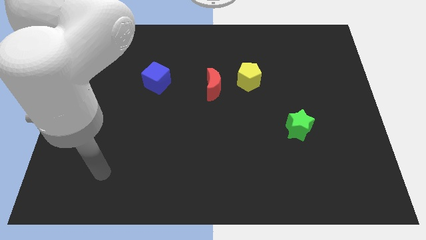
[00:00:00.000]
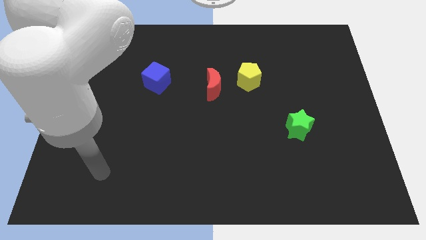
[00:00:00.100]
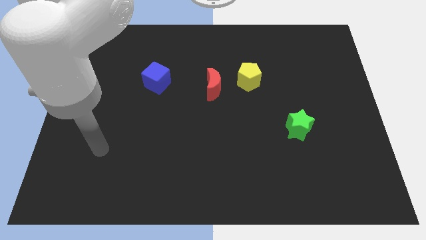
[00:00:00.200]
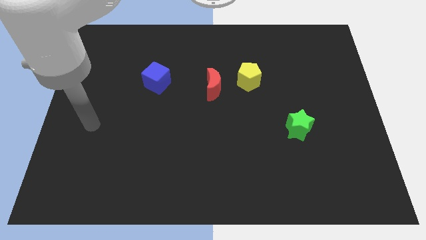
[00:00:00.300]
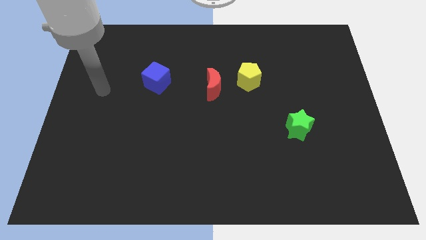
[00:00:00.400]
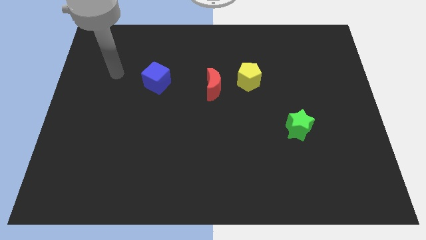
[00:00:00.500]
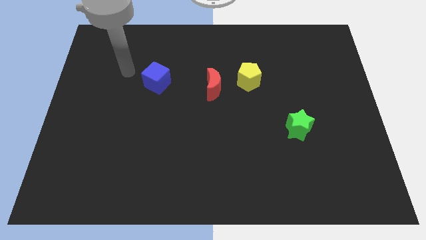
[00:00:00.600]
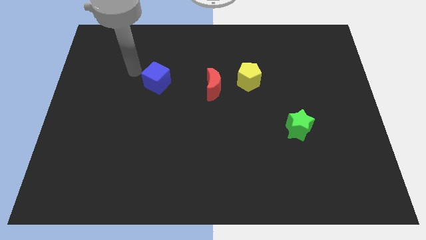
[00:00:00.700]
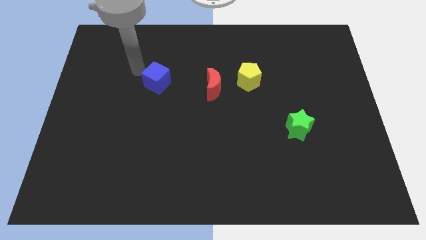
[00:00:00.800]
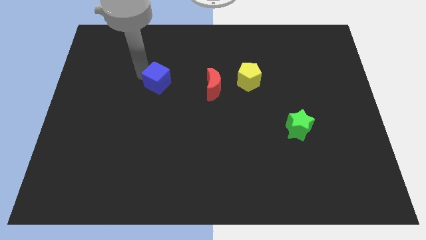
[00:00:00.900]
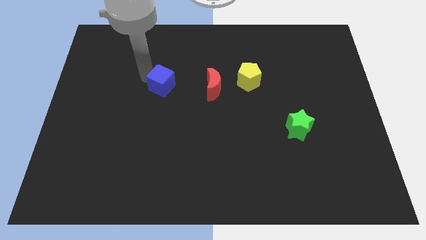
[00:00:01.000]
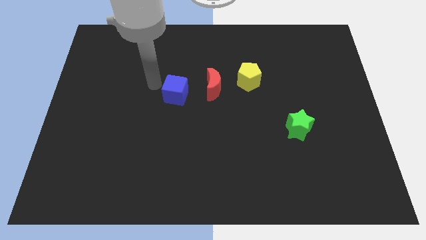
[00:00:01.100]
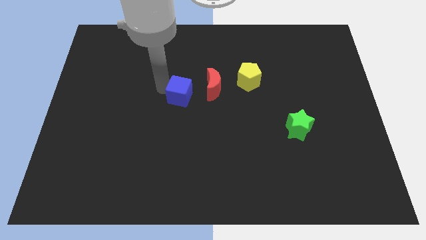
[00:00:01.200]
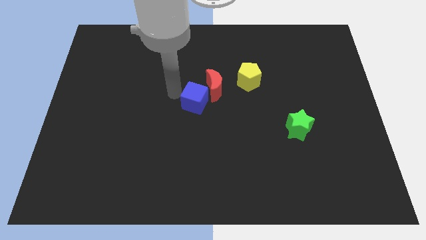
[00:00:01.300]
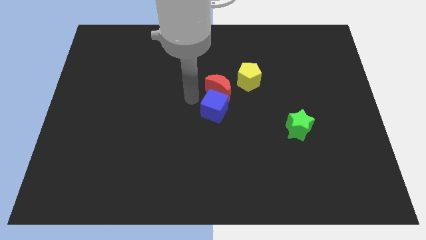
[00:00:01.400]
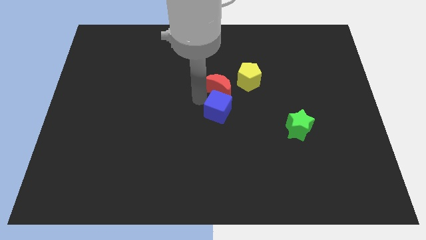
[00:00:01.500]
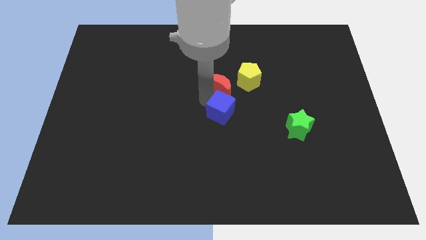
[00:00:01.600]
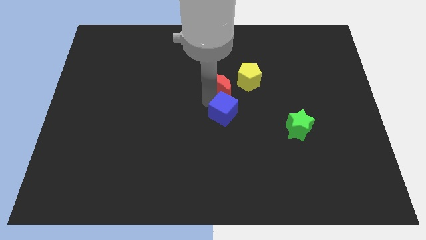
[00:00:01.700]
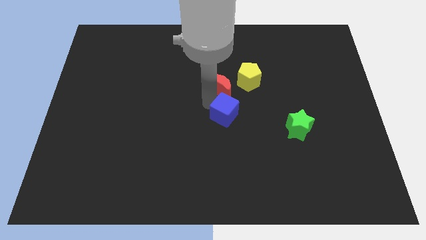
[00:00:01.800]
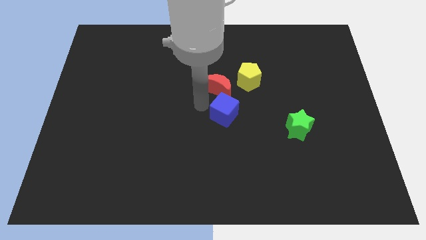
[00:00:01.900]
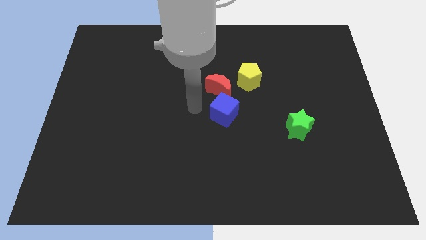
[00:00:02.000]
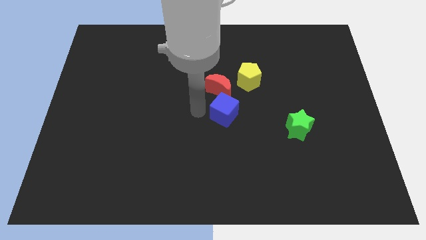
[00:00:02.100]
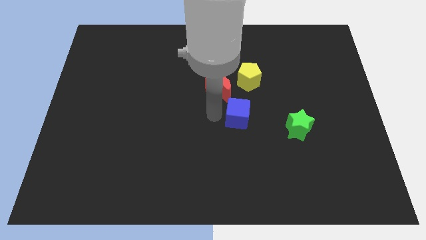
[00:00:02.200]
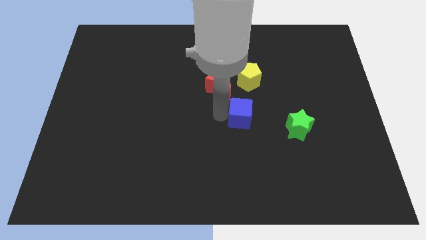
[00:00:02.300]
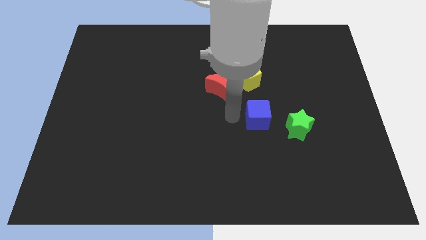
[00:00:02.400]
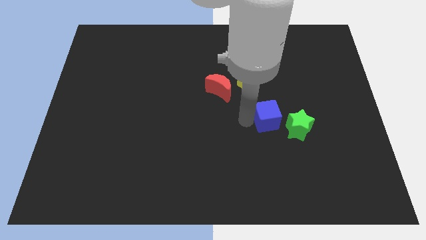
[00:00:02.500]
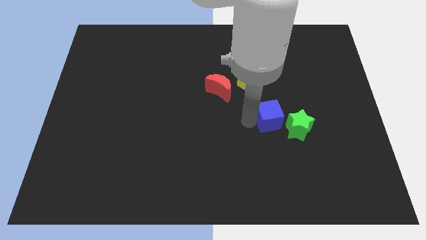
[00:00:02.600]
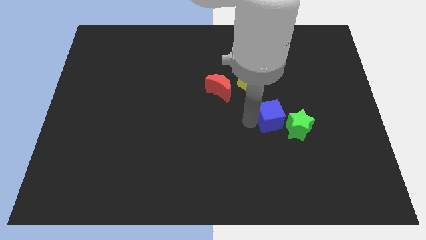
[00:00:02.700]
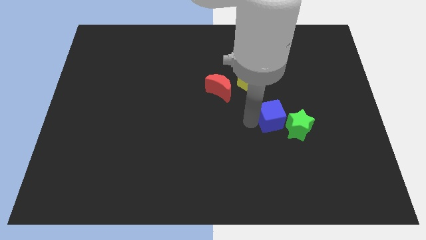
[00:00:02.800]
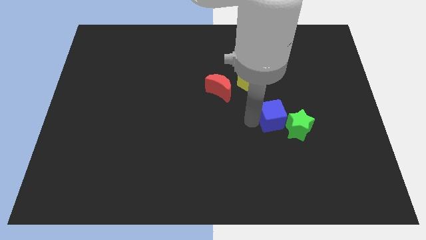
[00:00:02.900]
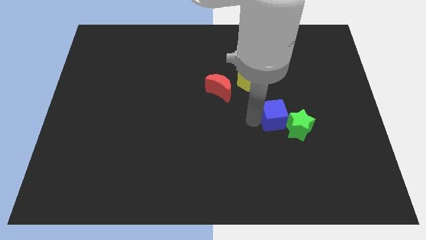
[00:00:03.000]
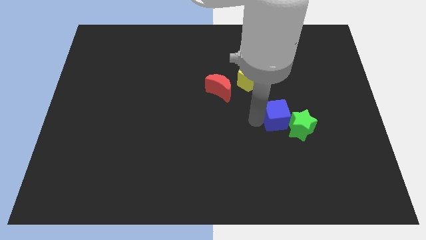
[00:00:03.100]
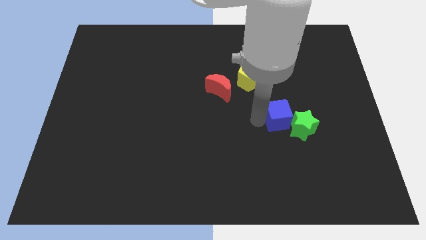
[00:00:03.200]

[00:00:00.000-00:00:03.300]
put the cube towards the star

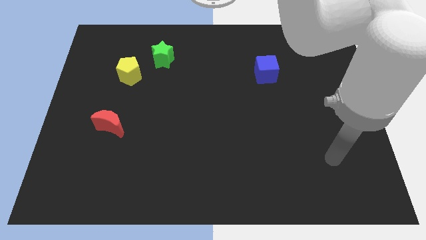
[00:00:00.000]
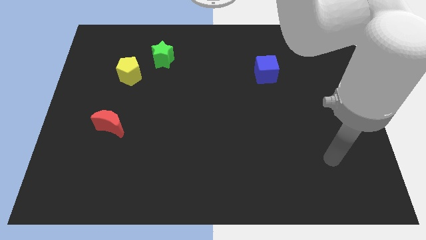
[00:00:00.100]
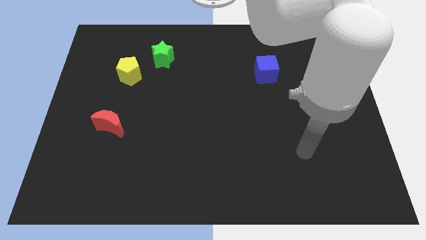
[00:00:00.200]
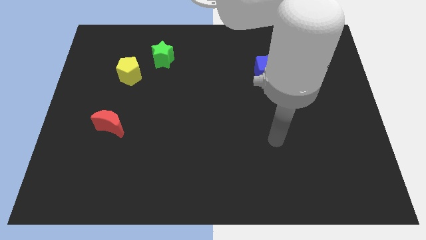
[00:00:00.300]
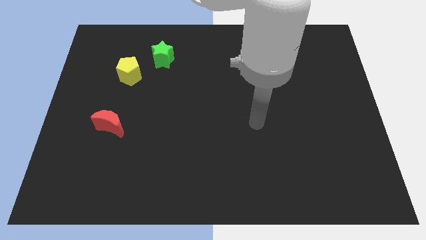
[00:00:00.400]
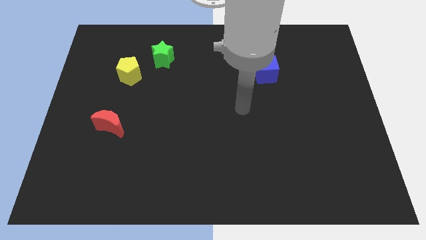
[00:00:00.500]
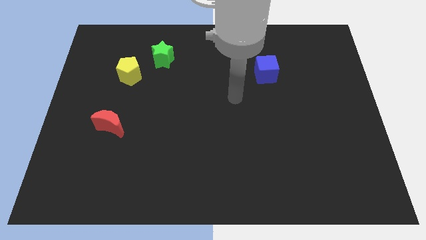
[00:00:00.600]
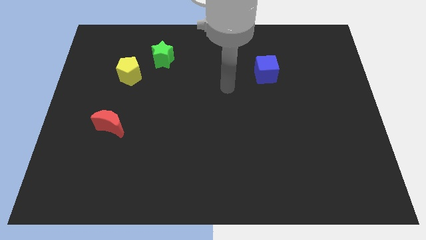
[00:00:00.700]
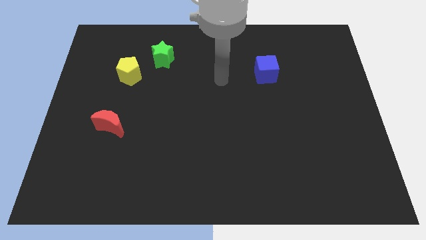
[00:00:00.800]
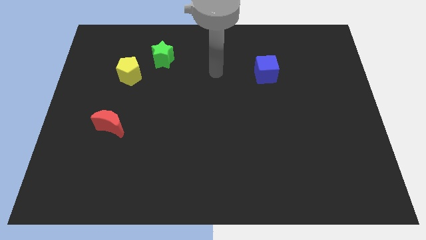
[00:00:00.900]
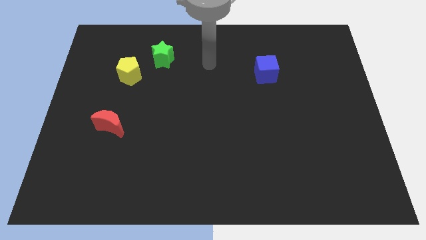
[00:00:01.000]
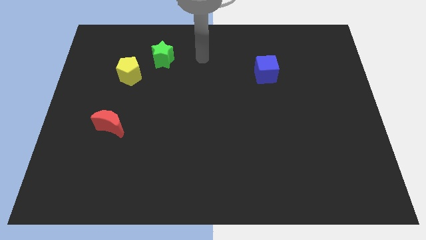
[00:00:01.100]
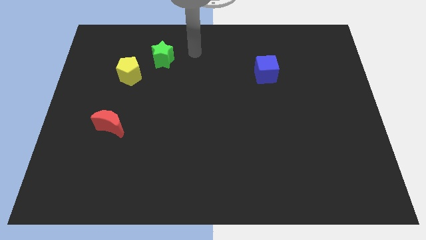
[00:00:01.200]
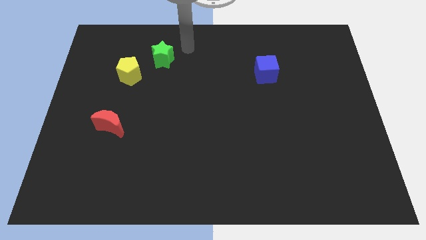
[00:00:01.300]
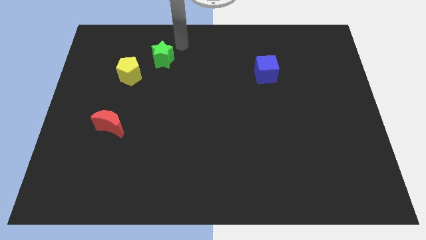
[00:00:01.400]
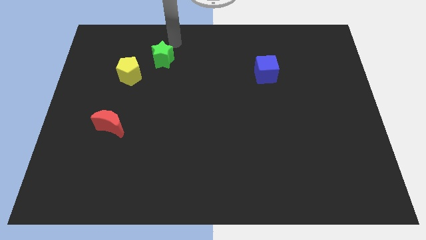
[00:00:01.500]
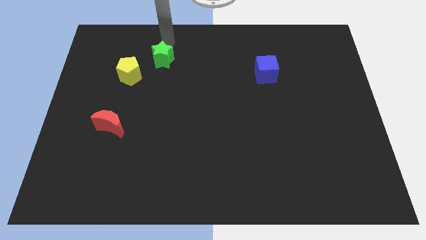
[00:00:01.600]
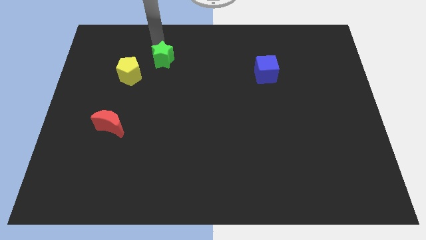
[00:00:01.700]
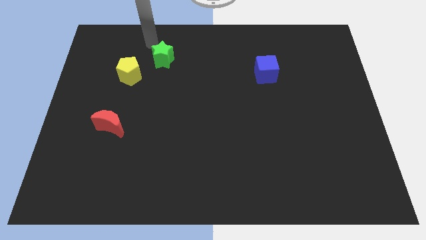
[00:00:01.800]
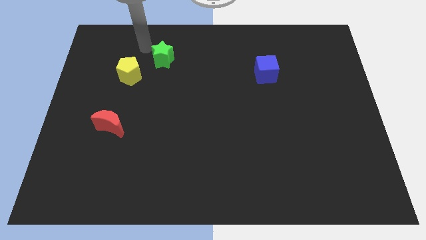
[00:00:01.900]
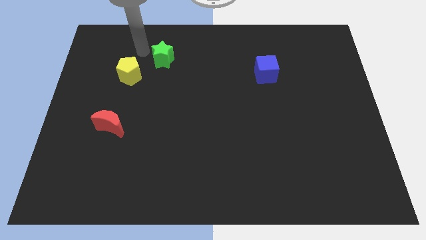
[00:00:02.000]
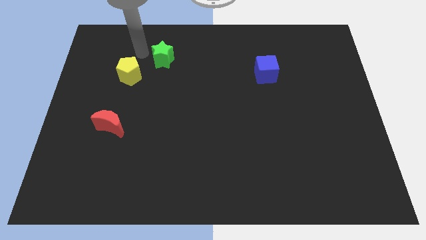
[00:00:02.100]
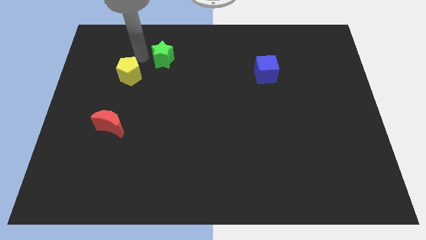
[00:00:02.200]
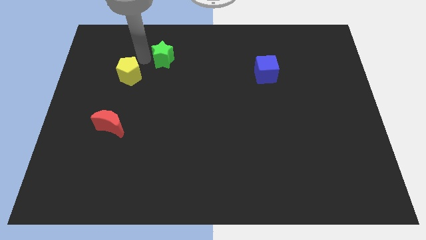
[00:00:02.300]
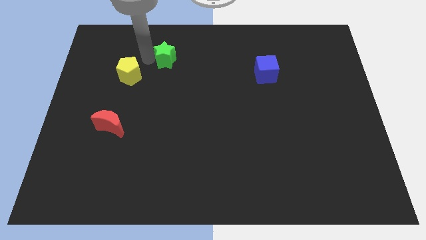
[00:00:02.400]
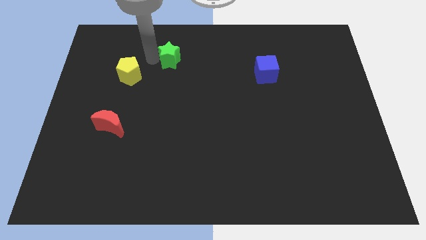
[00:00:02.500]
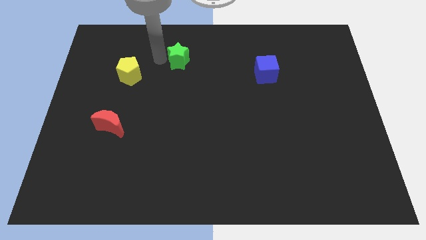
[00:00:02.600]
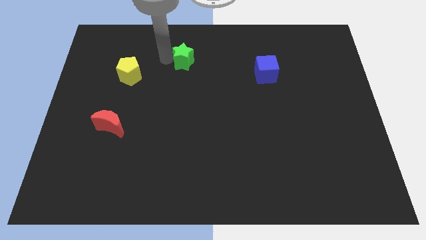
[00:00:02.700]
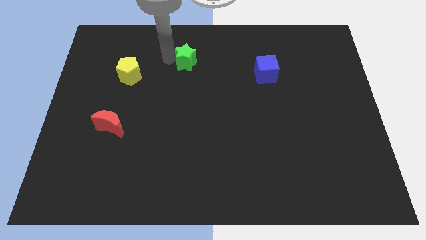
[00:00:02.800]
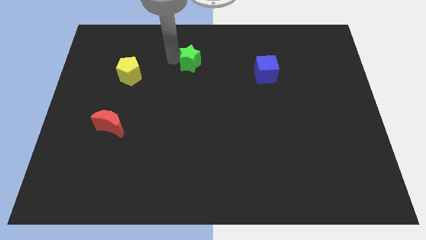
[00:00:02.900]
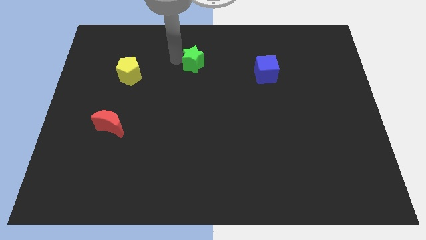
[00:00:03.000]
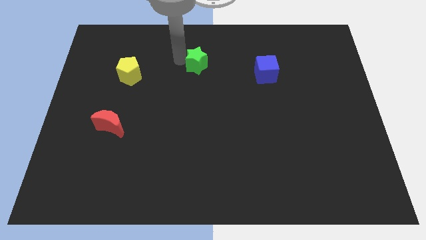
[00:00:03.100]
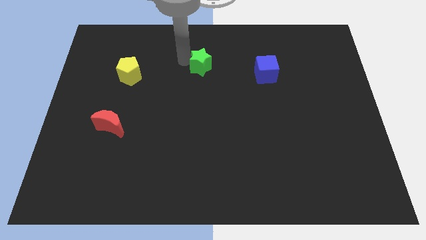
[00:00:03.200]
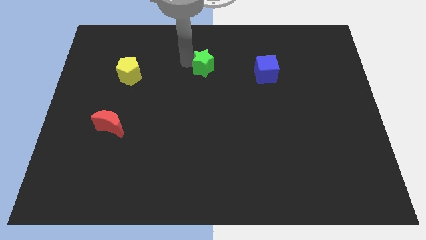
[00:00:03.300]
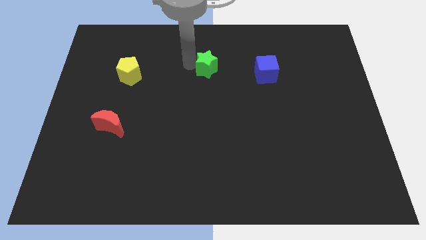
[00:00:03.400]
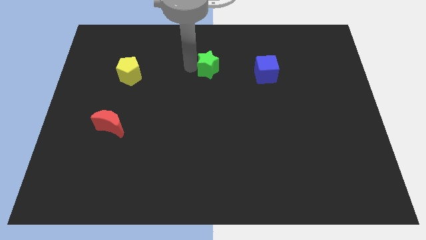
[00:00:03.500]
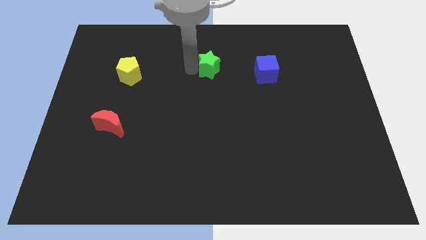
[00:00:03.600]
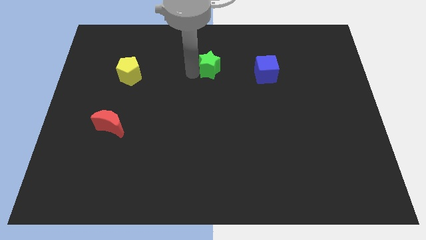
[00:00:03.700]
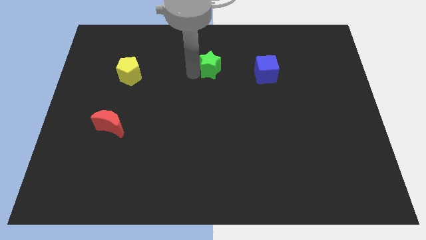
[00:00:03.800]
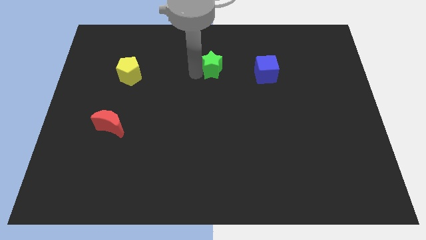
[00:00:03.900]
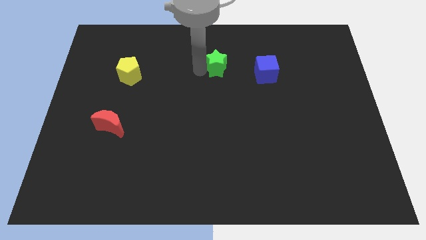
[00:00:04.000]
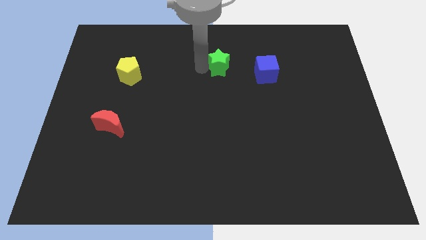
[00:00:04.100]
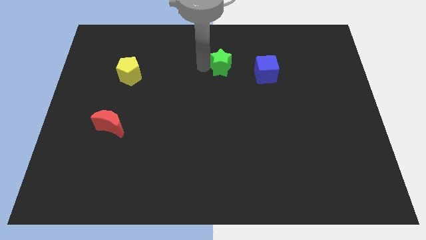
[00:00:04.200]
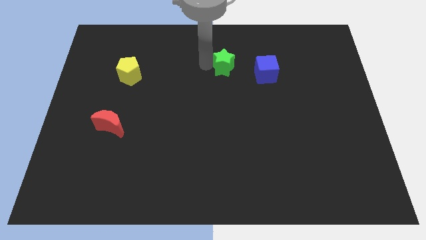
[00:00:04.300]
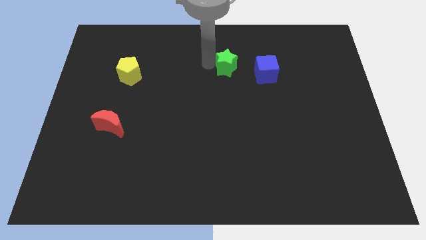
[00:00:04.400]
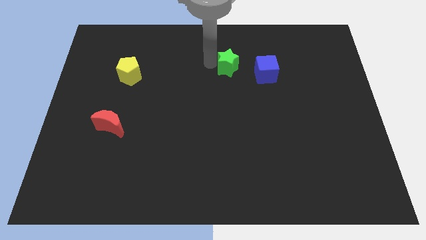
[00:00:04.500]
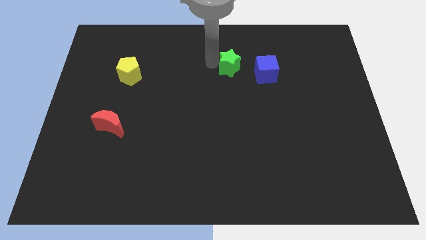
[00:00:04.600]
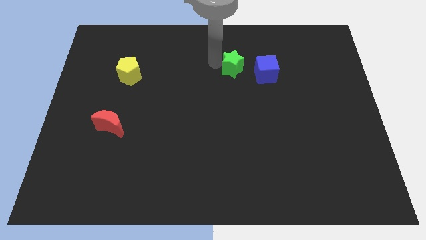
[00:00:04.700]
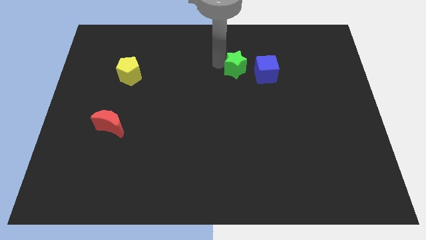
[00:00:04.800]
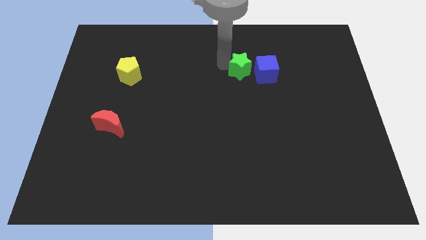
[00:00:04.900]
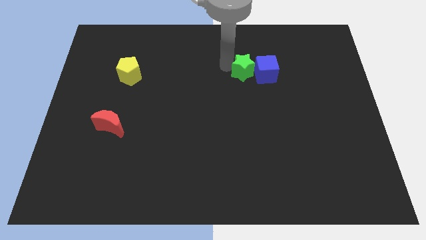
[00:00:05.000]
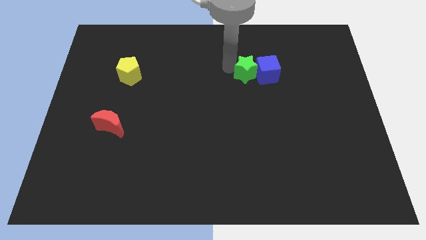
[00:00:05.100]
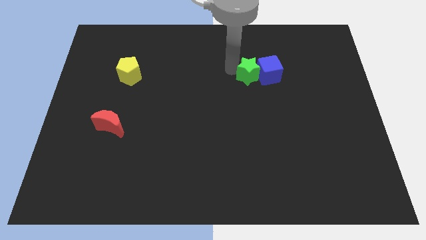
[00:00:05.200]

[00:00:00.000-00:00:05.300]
slide the star towards the blue block

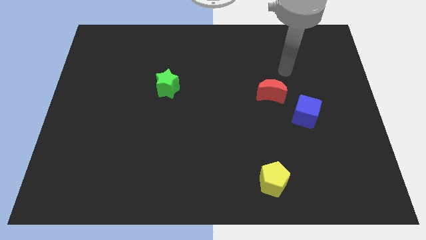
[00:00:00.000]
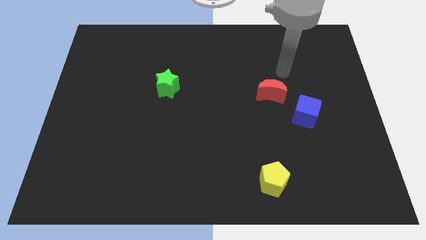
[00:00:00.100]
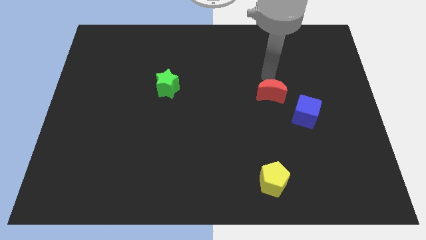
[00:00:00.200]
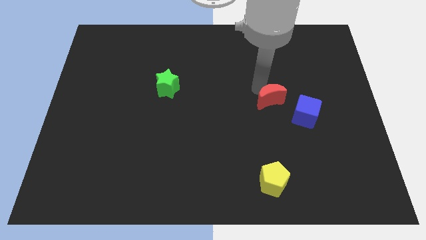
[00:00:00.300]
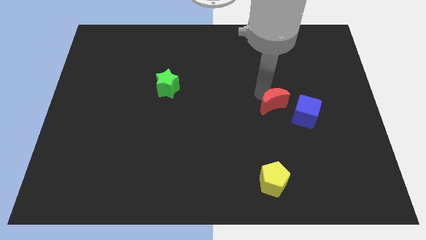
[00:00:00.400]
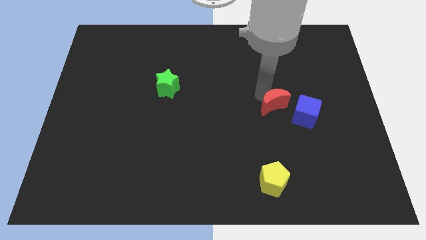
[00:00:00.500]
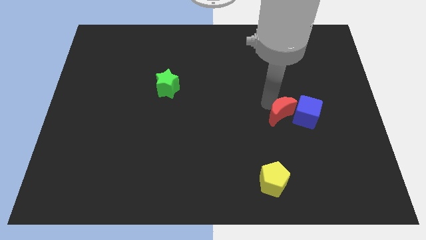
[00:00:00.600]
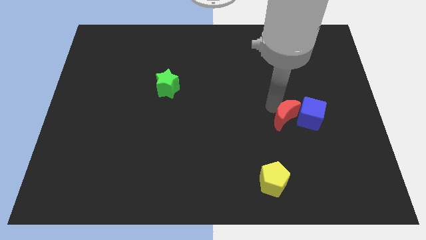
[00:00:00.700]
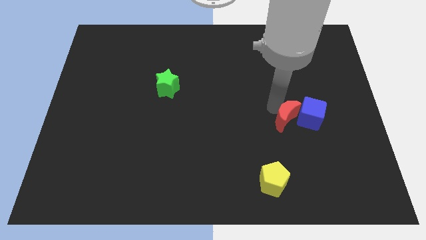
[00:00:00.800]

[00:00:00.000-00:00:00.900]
push the red block to the blue block
